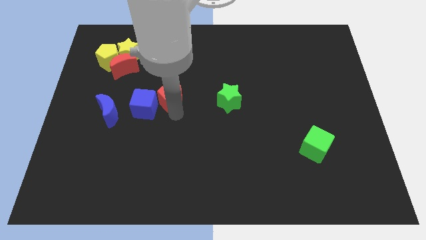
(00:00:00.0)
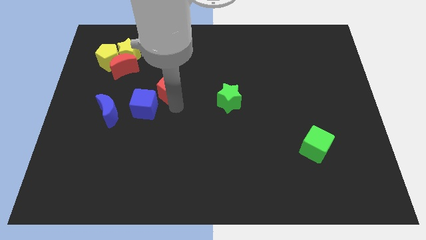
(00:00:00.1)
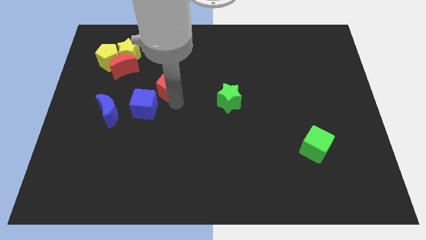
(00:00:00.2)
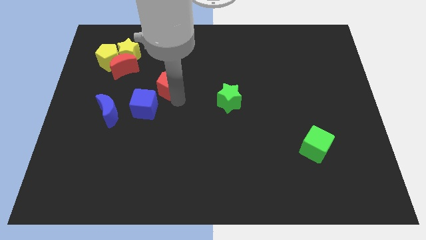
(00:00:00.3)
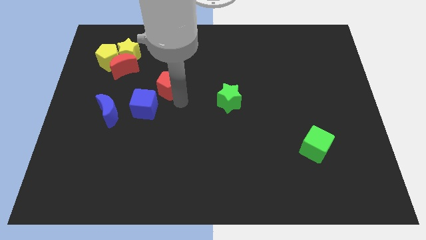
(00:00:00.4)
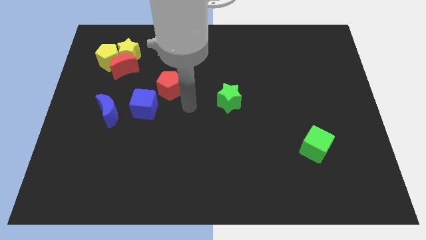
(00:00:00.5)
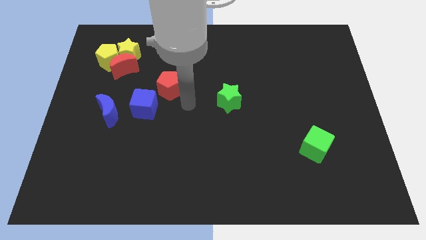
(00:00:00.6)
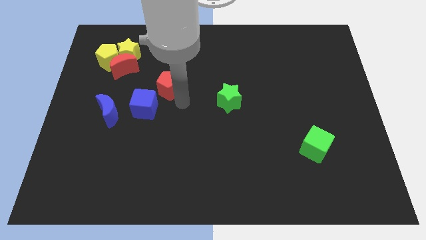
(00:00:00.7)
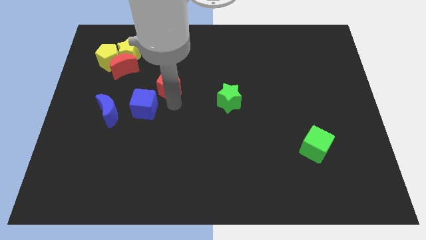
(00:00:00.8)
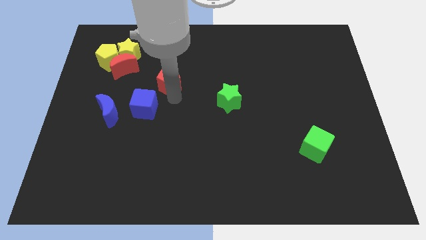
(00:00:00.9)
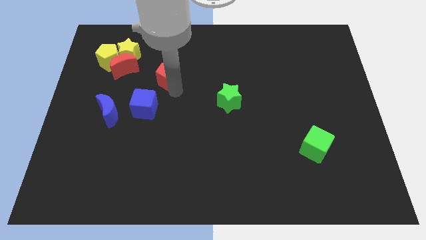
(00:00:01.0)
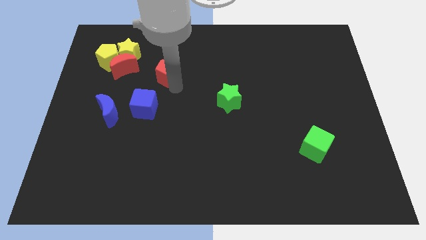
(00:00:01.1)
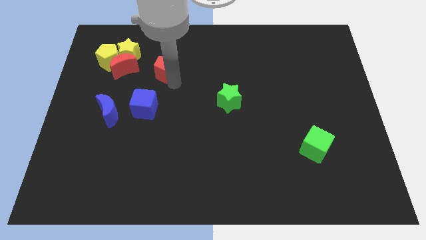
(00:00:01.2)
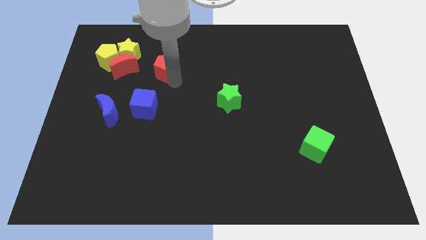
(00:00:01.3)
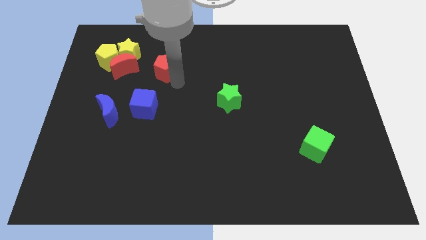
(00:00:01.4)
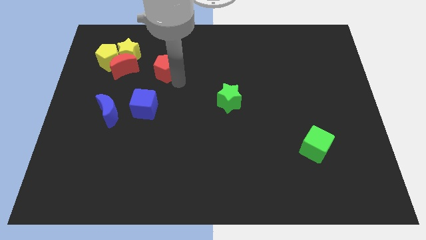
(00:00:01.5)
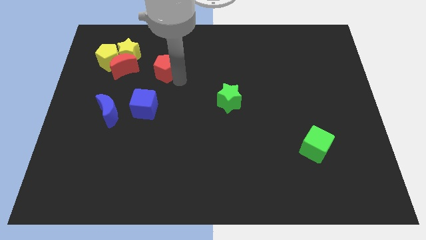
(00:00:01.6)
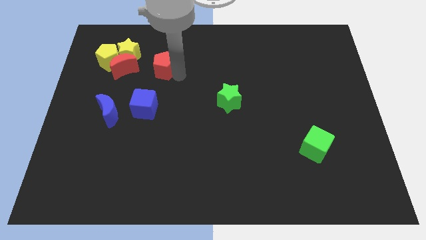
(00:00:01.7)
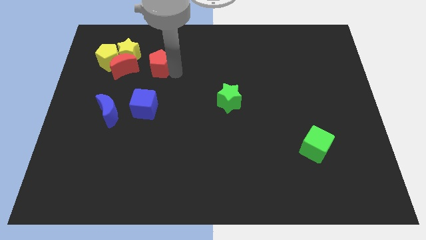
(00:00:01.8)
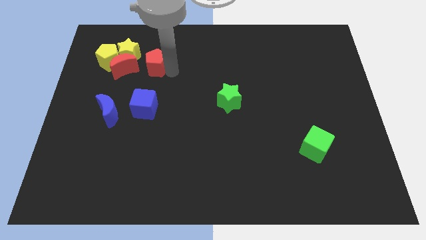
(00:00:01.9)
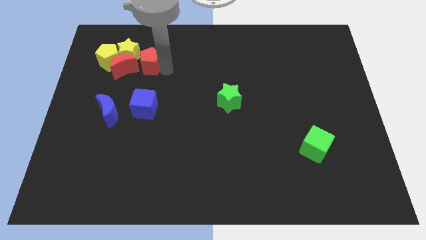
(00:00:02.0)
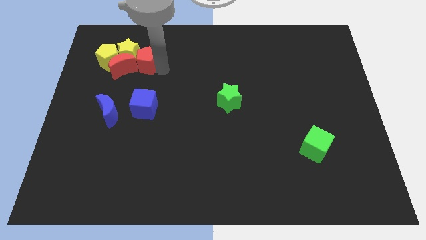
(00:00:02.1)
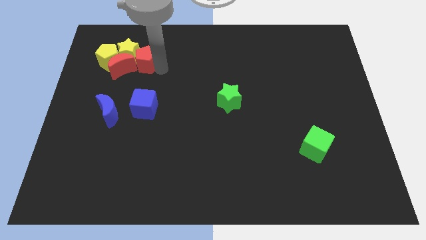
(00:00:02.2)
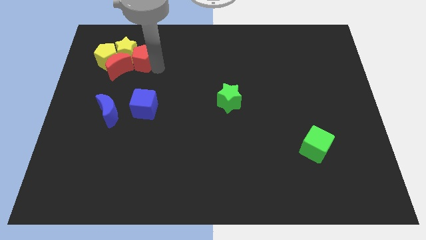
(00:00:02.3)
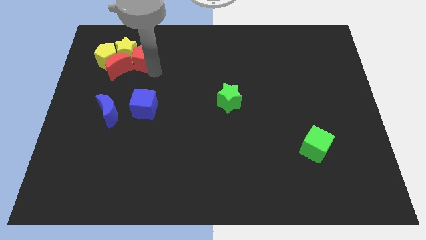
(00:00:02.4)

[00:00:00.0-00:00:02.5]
place red pentagon beside red moon

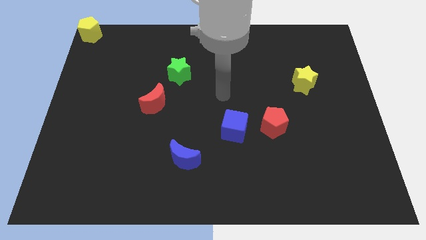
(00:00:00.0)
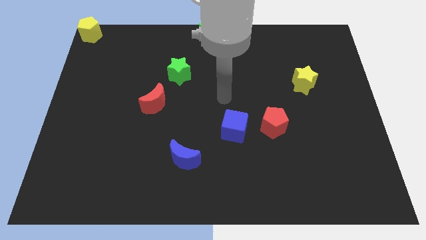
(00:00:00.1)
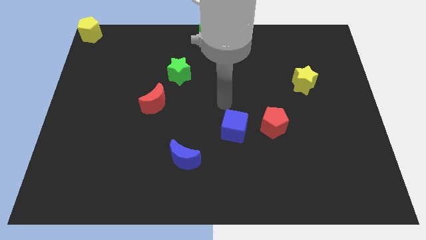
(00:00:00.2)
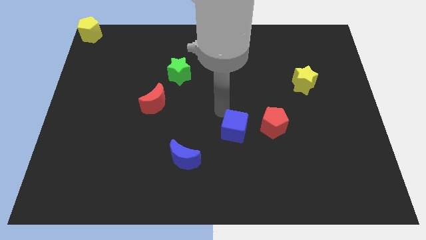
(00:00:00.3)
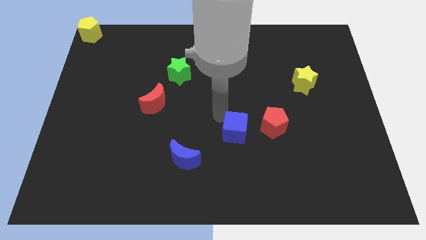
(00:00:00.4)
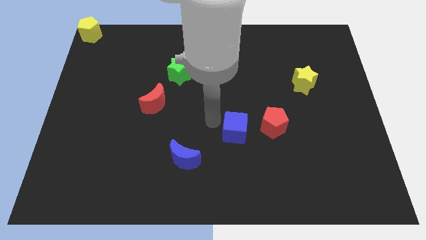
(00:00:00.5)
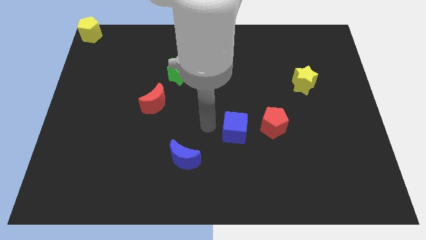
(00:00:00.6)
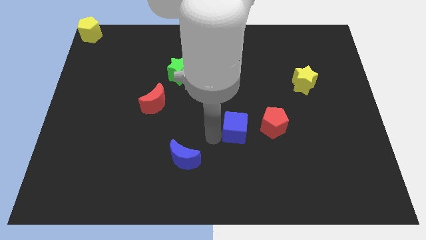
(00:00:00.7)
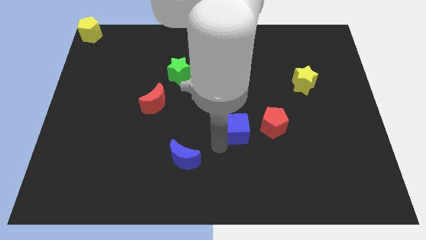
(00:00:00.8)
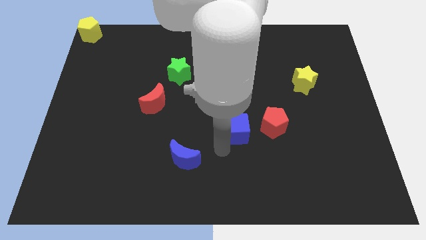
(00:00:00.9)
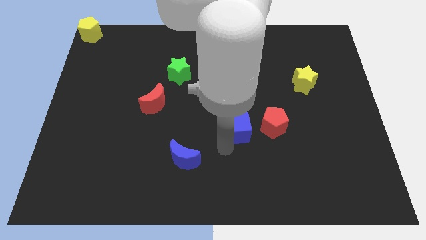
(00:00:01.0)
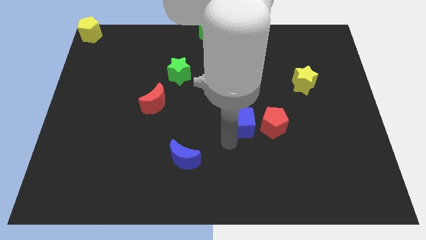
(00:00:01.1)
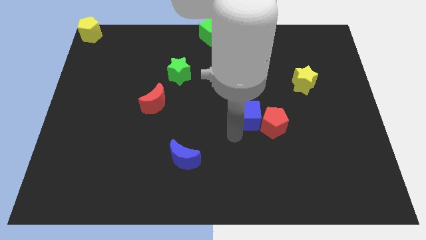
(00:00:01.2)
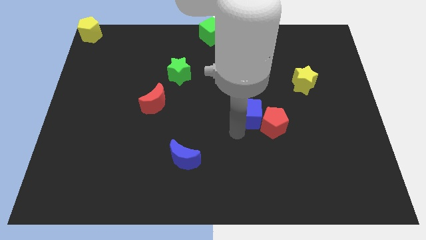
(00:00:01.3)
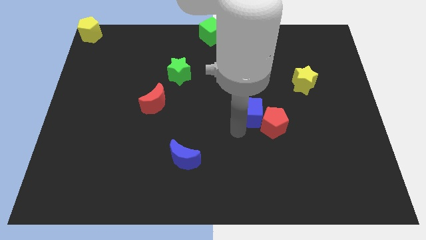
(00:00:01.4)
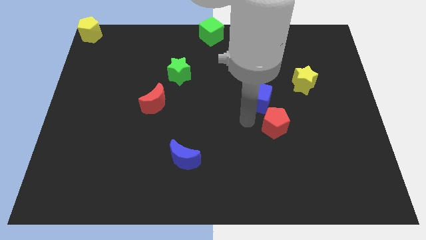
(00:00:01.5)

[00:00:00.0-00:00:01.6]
move the blue cube at the bottom left side of the red pentagon

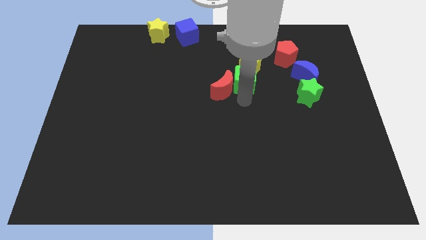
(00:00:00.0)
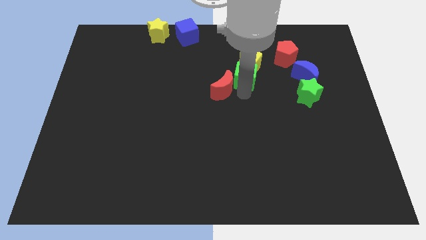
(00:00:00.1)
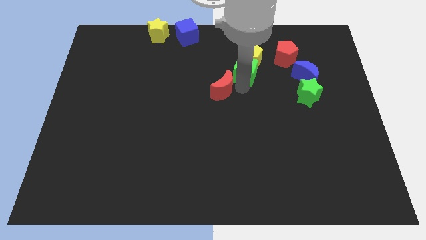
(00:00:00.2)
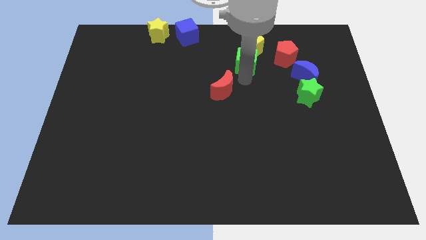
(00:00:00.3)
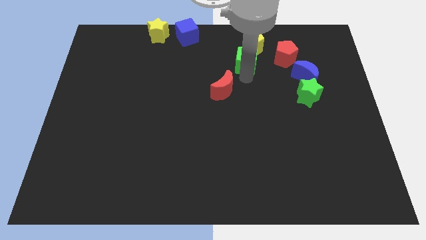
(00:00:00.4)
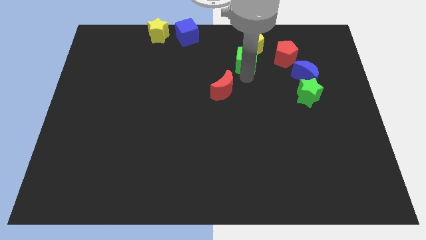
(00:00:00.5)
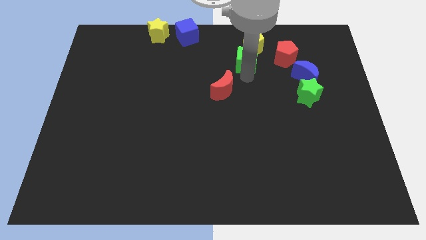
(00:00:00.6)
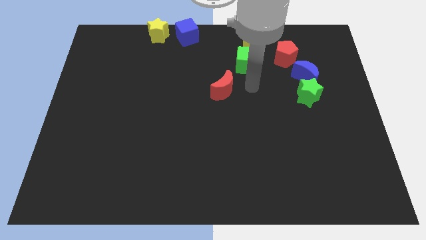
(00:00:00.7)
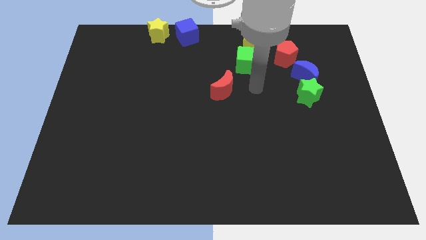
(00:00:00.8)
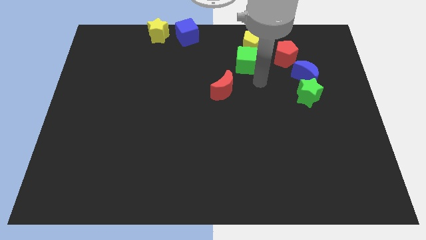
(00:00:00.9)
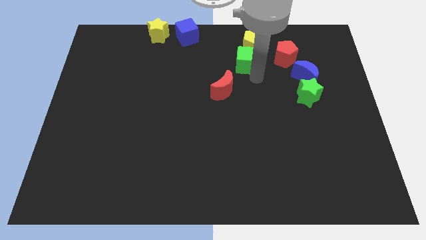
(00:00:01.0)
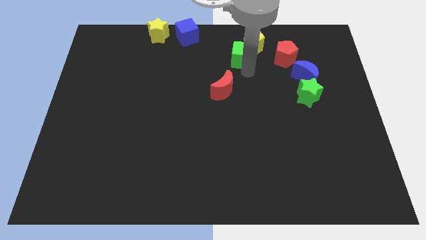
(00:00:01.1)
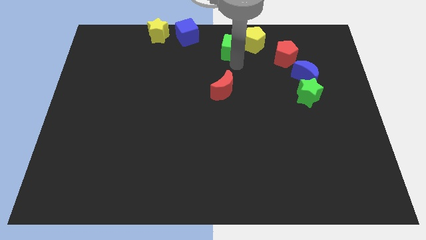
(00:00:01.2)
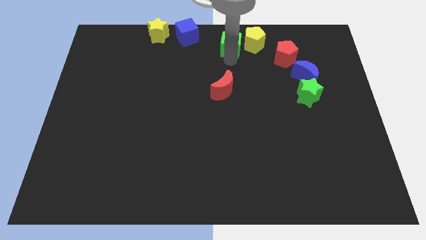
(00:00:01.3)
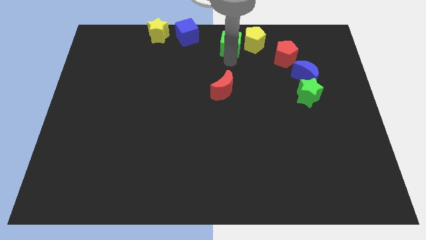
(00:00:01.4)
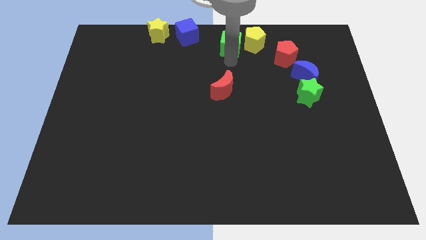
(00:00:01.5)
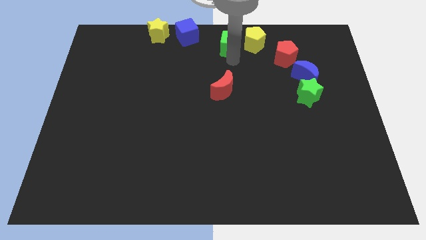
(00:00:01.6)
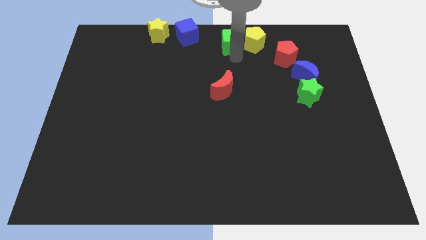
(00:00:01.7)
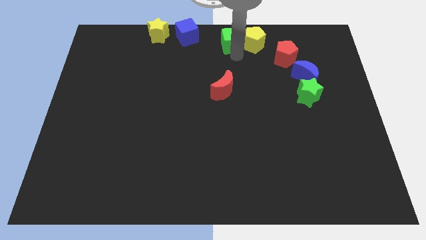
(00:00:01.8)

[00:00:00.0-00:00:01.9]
place the green cube to the left of the yellow pentagon

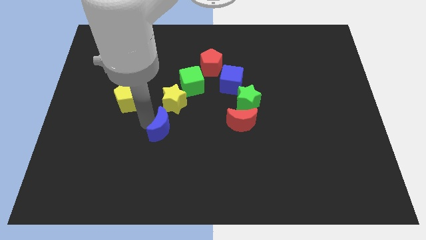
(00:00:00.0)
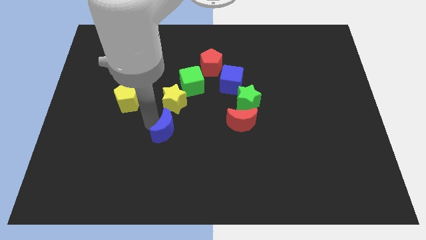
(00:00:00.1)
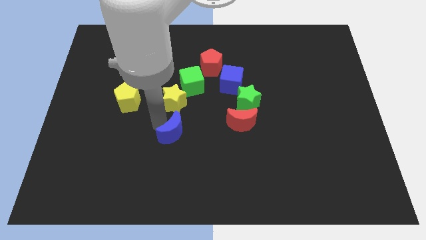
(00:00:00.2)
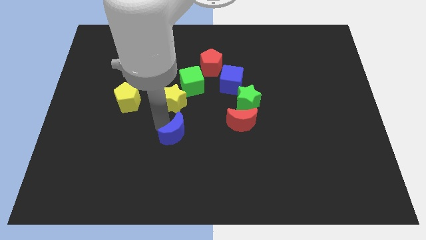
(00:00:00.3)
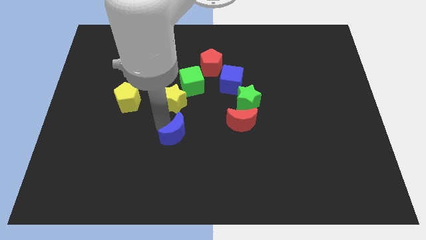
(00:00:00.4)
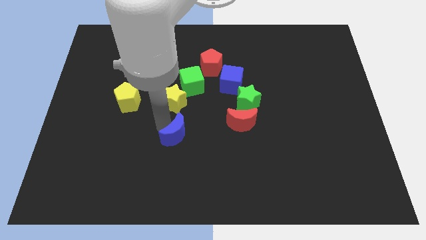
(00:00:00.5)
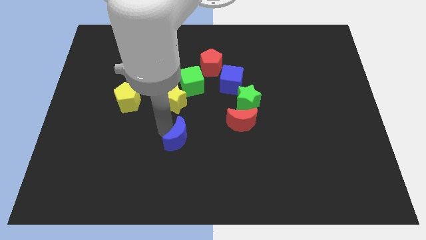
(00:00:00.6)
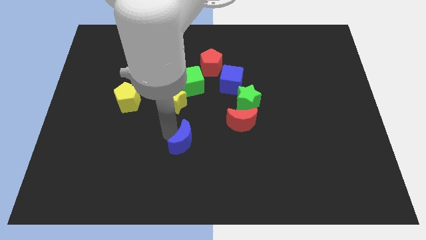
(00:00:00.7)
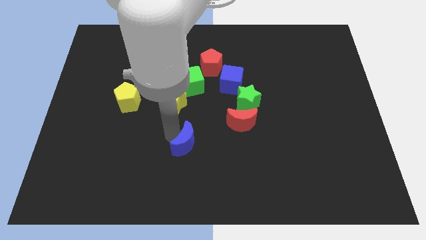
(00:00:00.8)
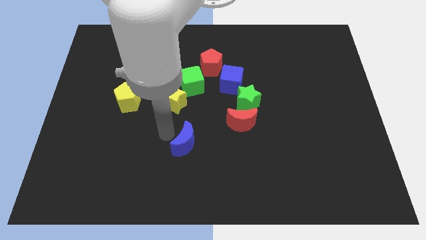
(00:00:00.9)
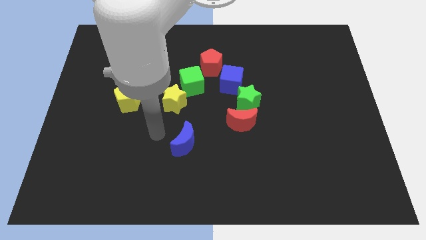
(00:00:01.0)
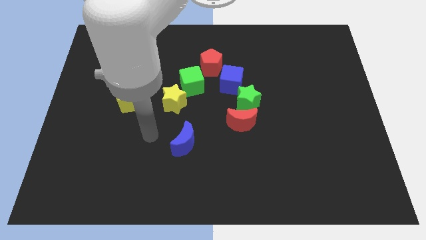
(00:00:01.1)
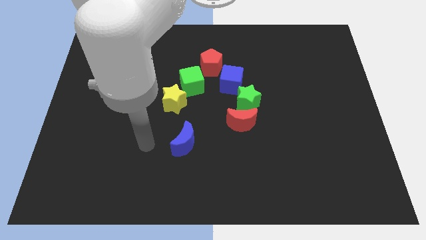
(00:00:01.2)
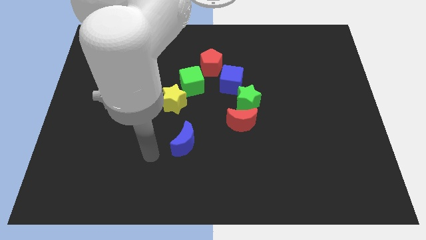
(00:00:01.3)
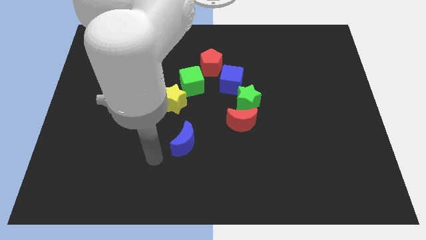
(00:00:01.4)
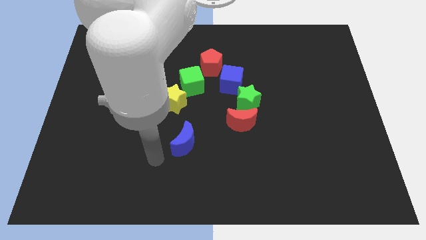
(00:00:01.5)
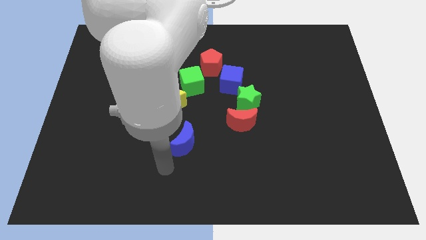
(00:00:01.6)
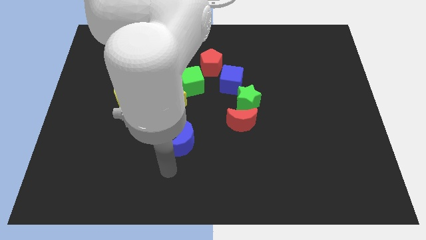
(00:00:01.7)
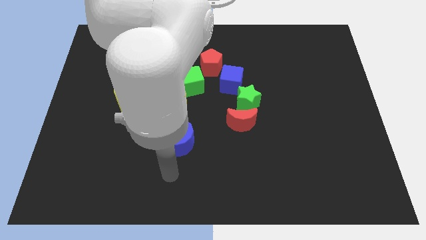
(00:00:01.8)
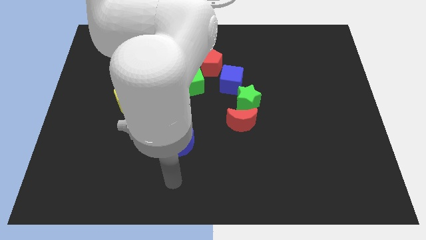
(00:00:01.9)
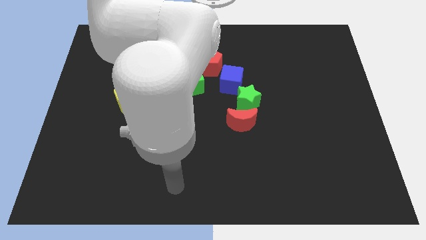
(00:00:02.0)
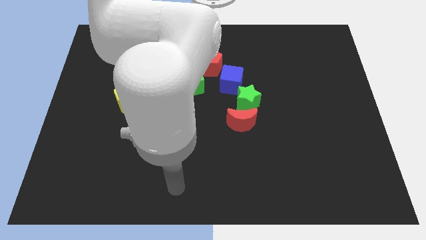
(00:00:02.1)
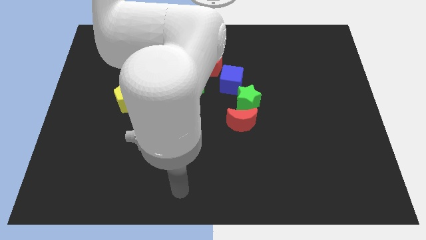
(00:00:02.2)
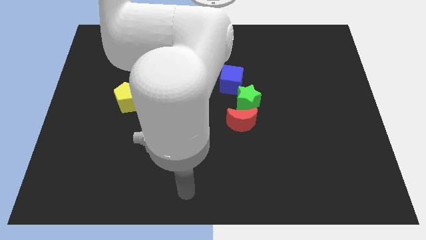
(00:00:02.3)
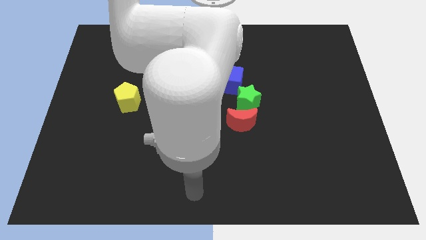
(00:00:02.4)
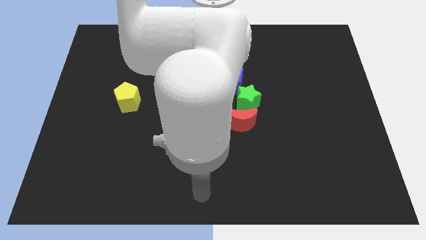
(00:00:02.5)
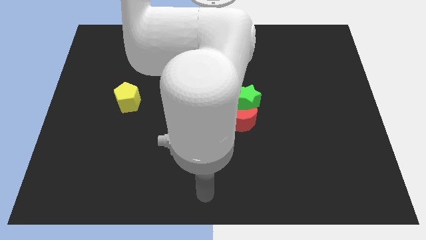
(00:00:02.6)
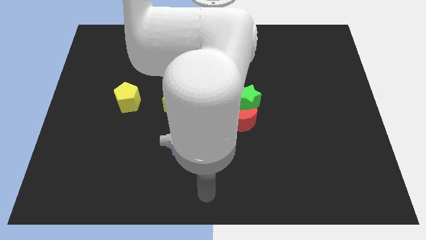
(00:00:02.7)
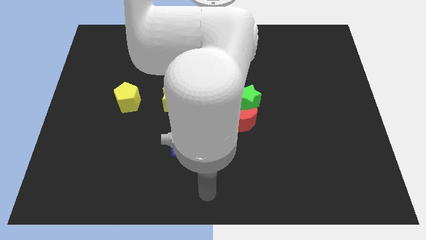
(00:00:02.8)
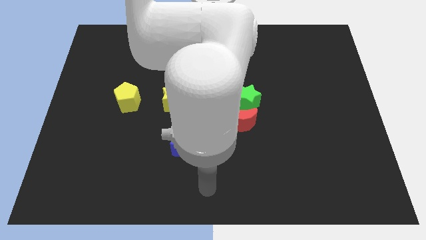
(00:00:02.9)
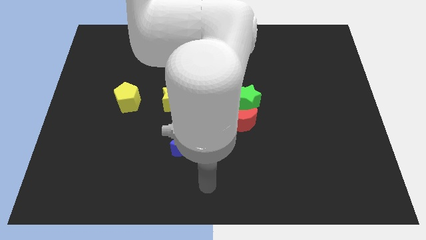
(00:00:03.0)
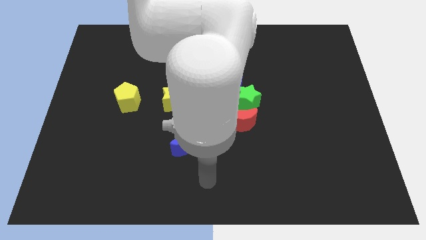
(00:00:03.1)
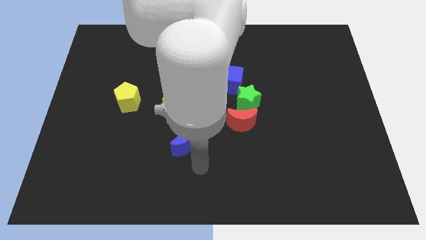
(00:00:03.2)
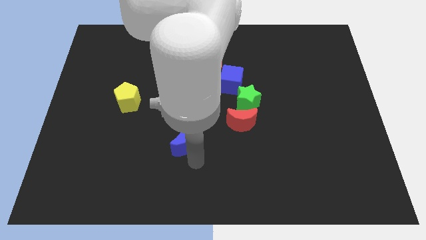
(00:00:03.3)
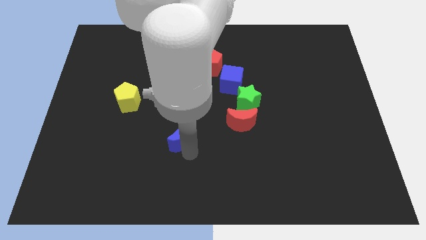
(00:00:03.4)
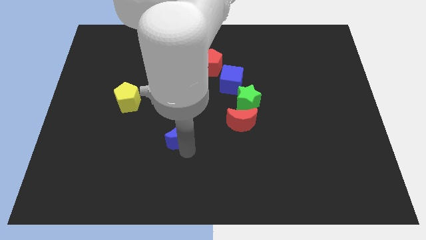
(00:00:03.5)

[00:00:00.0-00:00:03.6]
move your arm away from the blue moon
